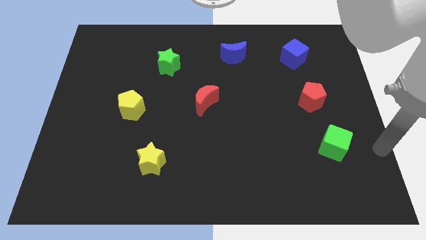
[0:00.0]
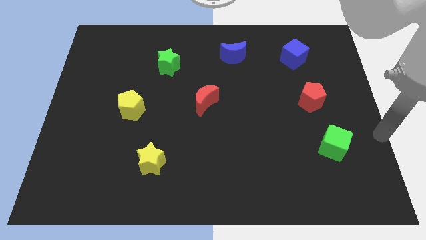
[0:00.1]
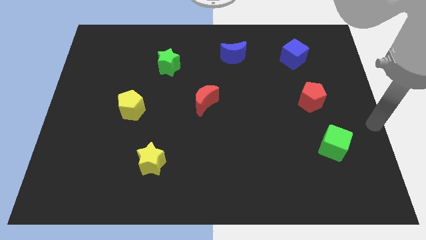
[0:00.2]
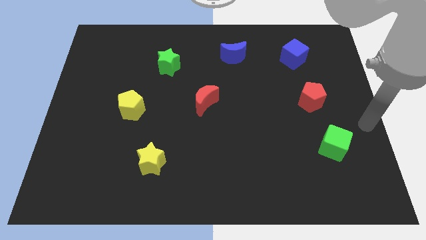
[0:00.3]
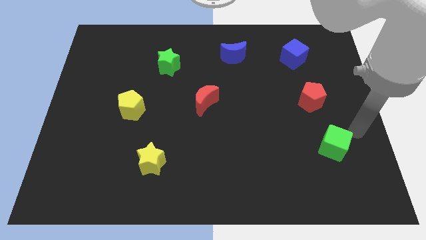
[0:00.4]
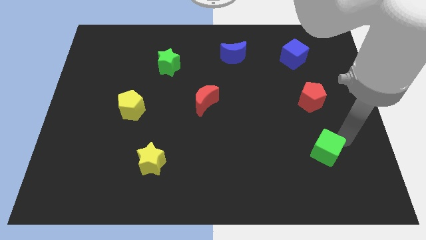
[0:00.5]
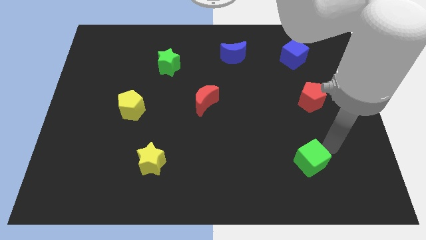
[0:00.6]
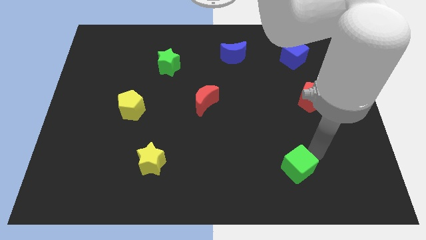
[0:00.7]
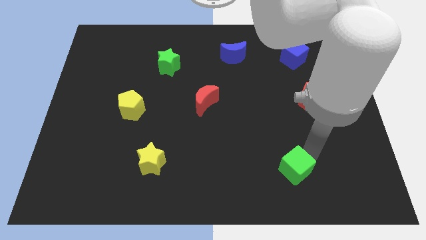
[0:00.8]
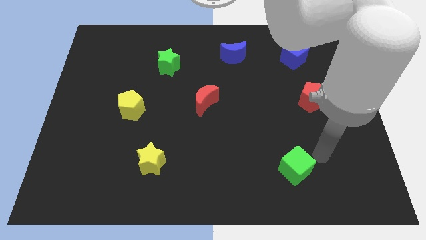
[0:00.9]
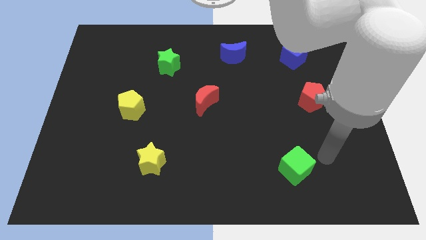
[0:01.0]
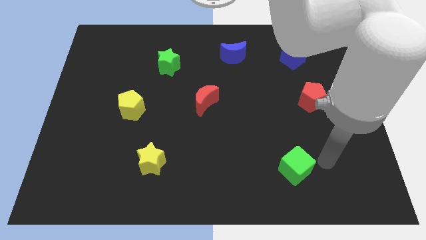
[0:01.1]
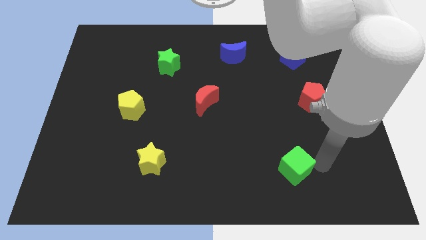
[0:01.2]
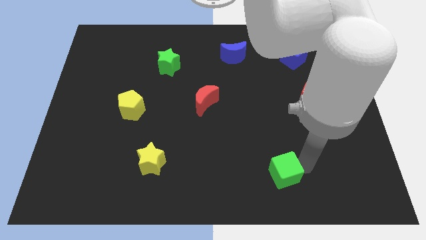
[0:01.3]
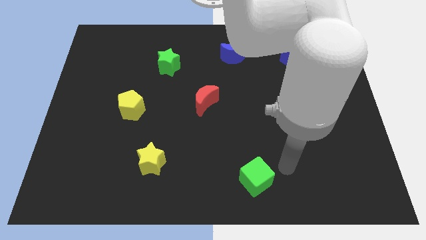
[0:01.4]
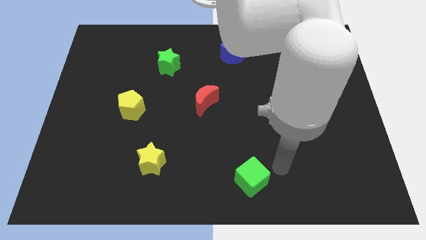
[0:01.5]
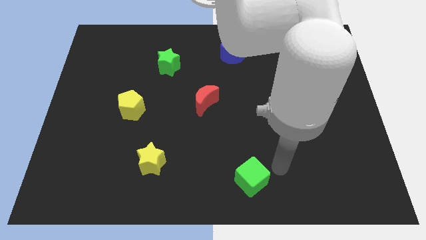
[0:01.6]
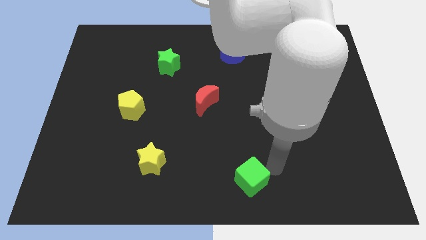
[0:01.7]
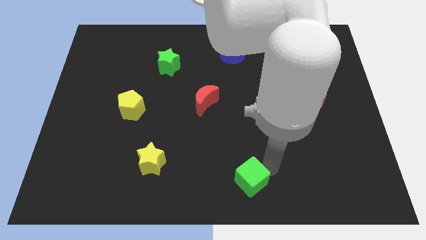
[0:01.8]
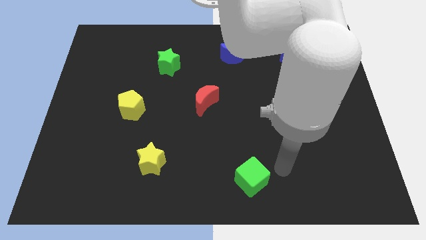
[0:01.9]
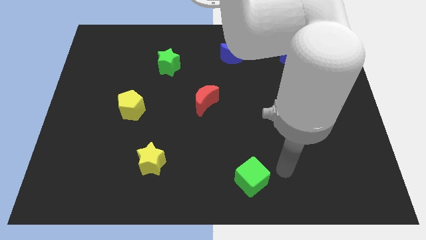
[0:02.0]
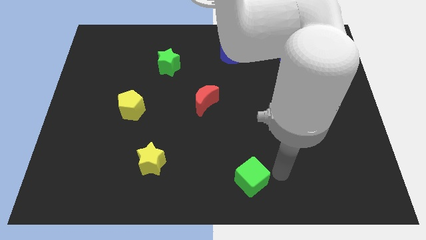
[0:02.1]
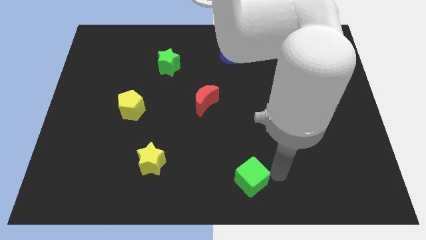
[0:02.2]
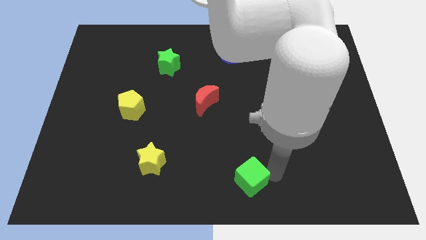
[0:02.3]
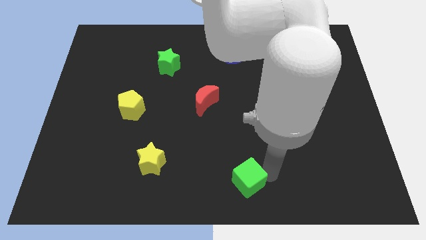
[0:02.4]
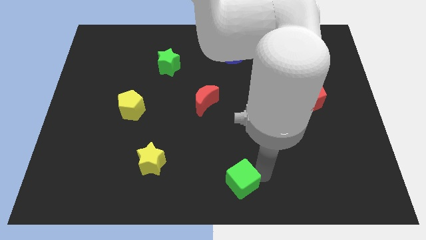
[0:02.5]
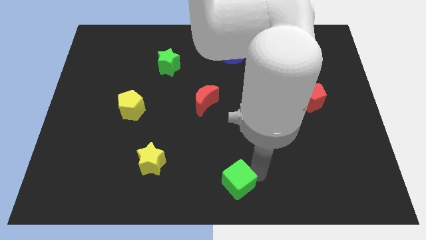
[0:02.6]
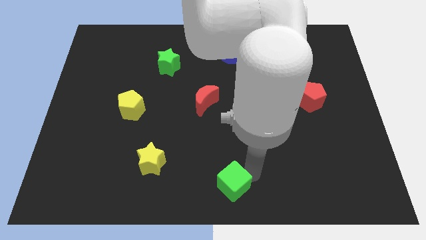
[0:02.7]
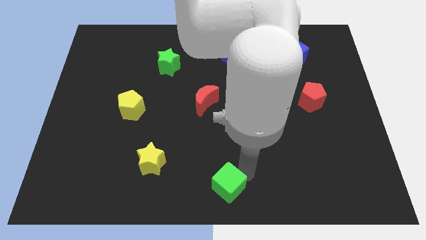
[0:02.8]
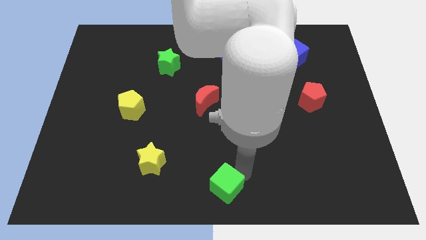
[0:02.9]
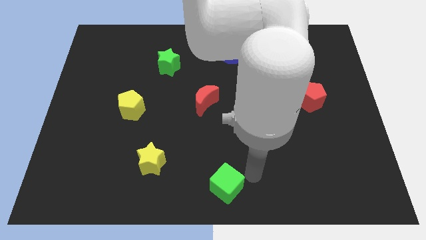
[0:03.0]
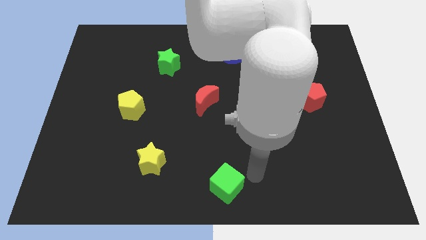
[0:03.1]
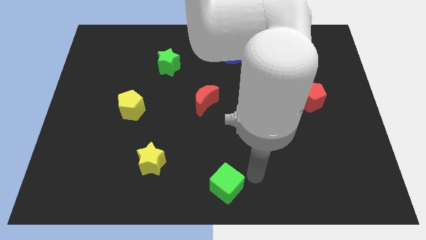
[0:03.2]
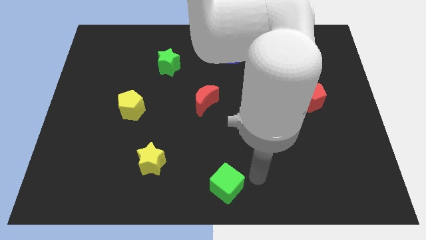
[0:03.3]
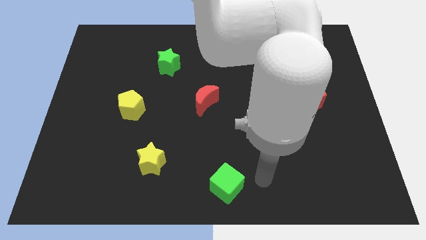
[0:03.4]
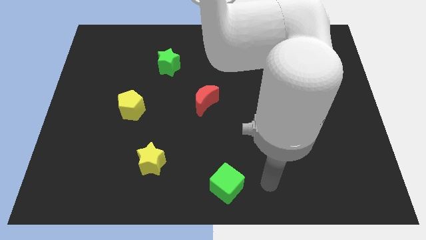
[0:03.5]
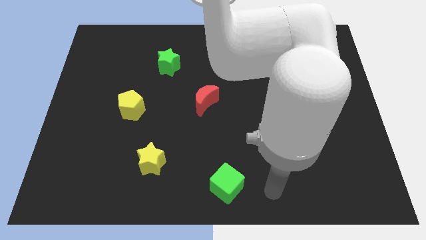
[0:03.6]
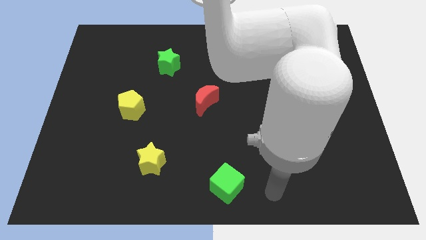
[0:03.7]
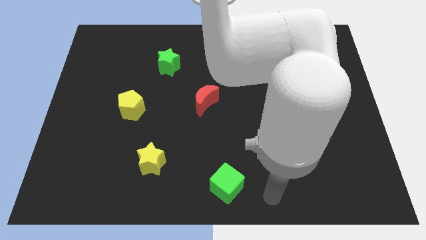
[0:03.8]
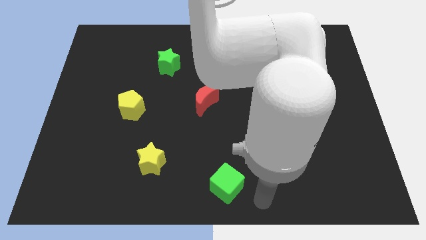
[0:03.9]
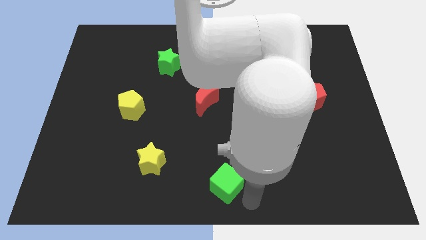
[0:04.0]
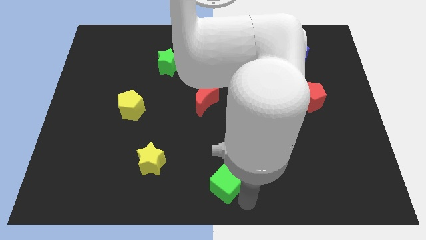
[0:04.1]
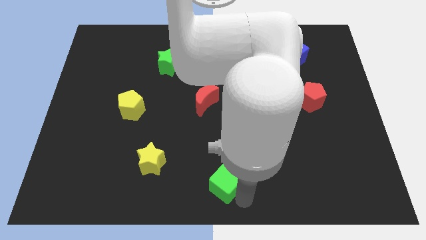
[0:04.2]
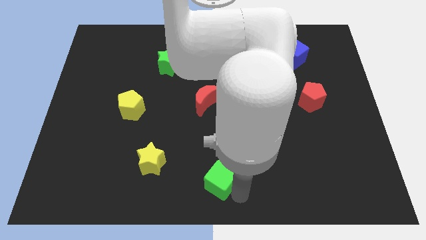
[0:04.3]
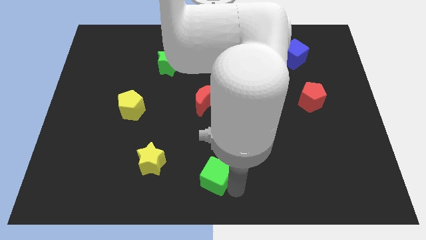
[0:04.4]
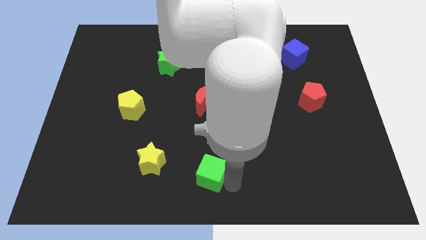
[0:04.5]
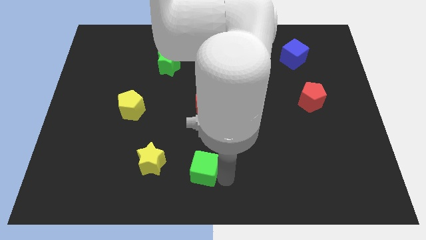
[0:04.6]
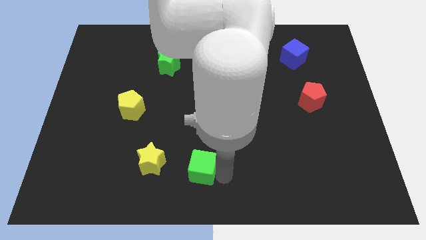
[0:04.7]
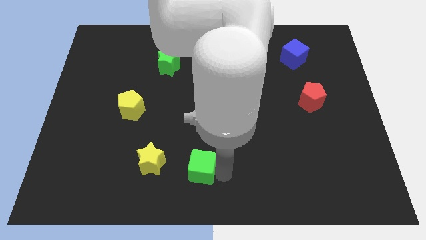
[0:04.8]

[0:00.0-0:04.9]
push the green cube towards the right side of the yellow star

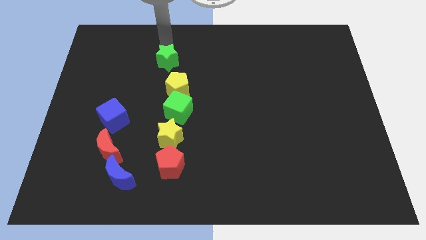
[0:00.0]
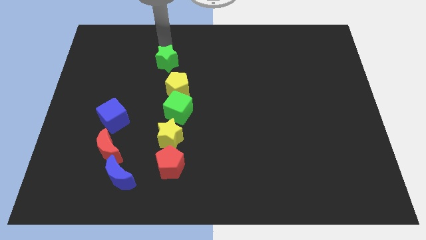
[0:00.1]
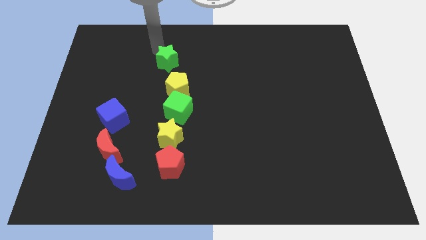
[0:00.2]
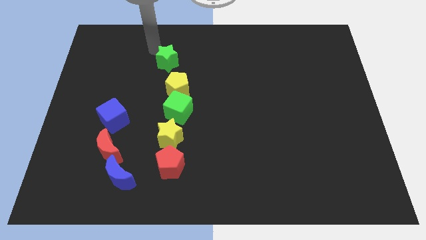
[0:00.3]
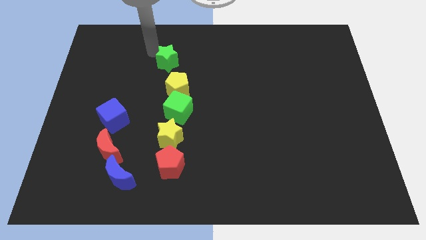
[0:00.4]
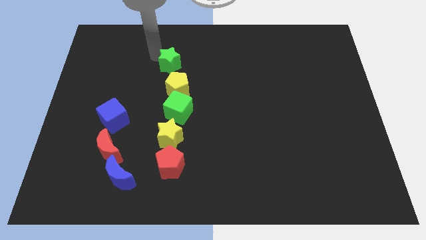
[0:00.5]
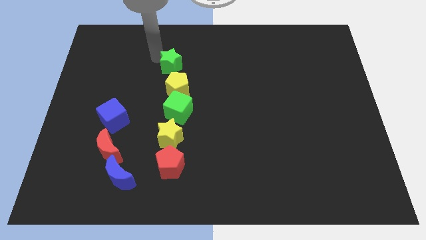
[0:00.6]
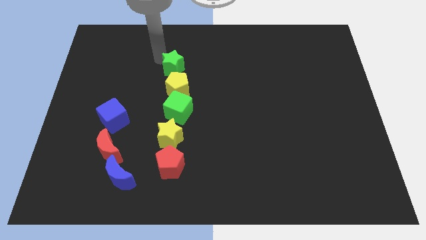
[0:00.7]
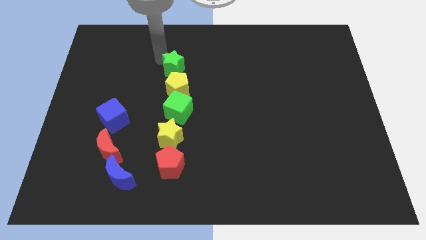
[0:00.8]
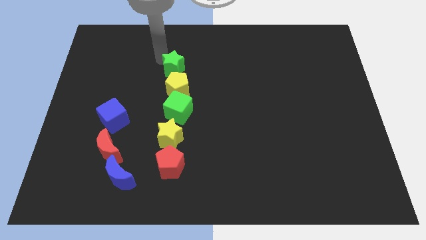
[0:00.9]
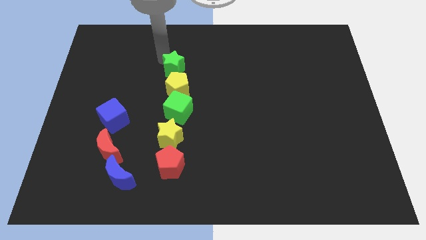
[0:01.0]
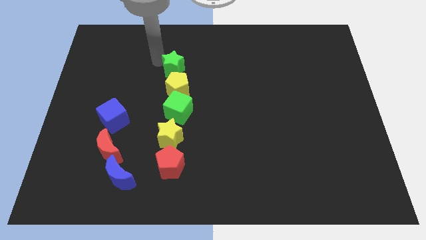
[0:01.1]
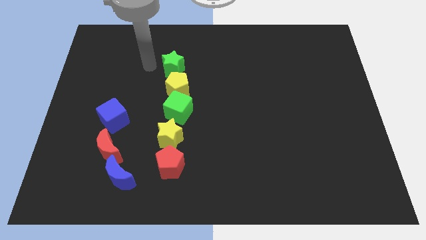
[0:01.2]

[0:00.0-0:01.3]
push the green star into the yellow pentagon

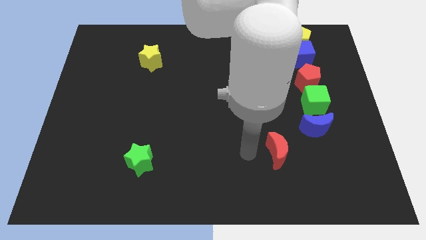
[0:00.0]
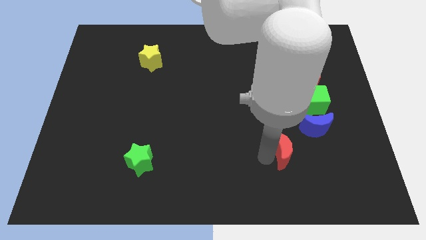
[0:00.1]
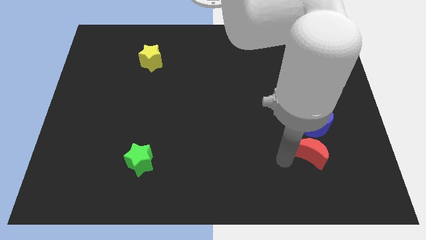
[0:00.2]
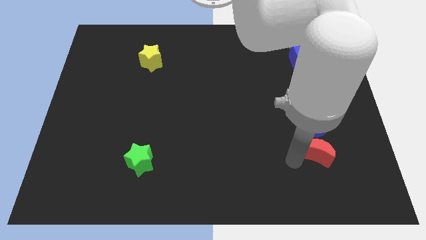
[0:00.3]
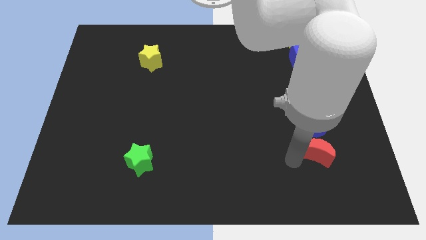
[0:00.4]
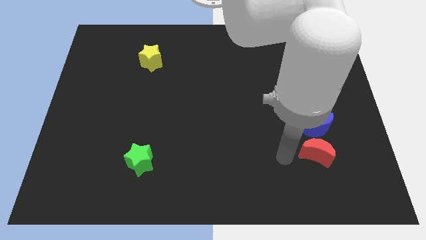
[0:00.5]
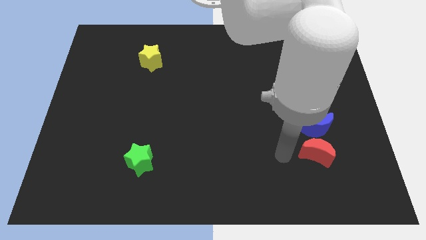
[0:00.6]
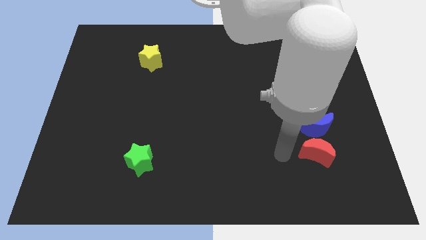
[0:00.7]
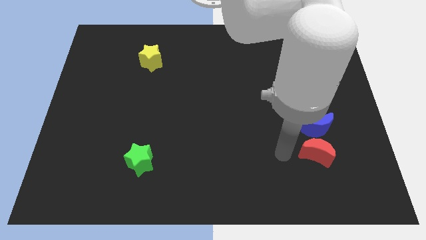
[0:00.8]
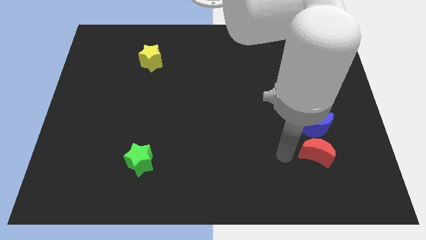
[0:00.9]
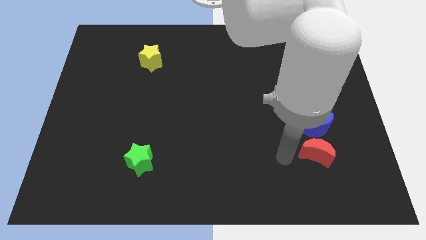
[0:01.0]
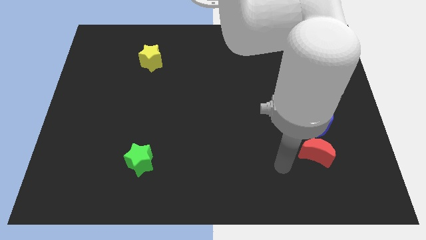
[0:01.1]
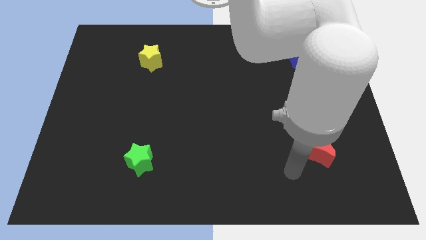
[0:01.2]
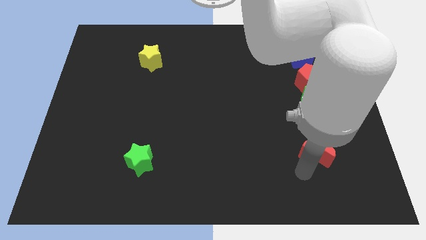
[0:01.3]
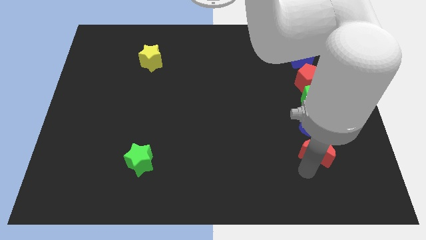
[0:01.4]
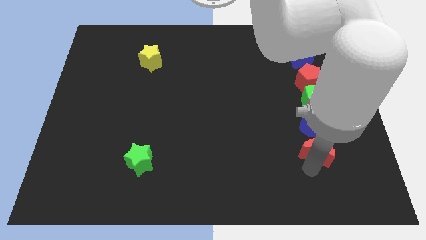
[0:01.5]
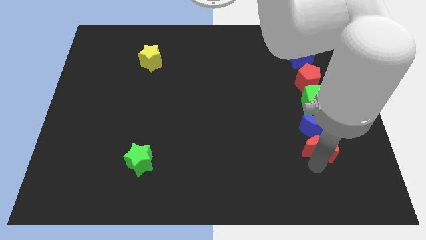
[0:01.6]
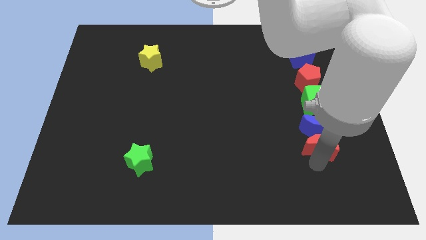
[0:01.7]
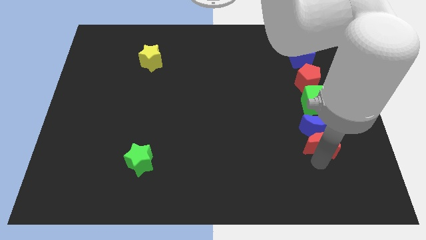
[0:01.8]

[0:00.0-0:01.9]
add the red moon to the vertical line of a group of blocks

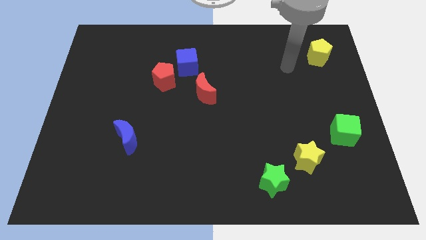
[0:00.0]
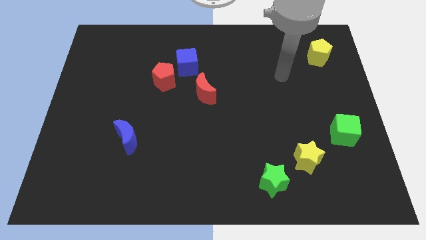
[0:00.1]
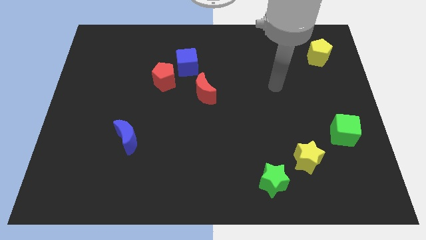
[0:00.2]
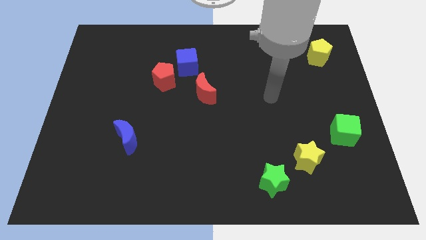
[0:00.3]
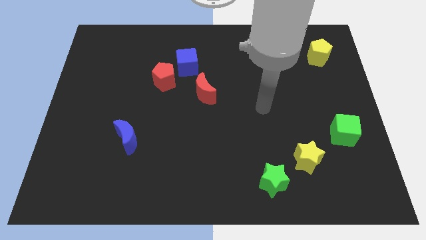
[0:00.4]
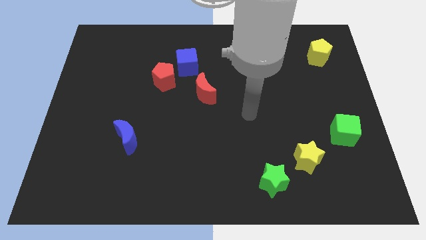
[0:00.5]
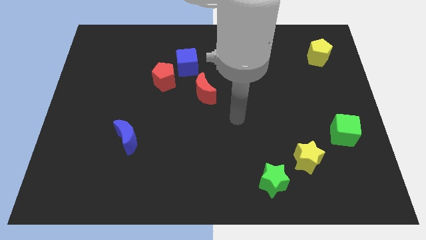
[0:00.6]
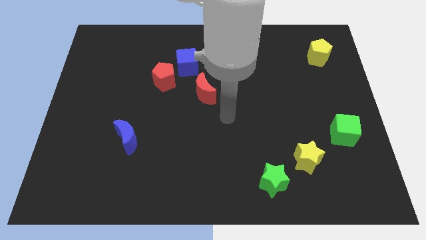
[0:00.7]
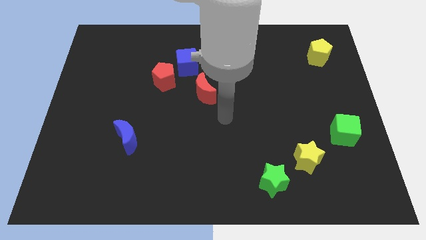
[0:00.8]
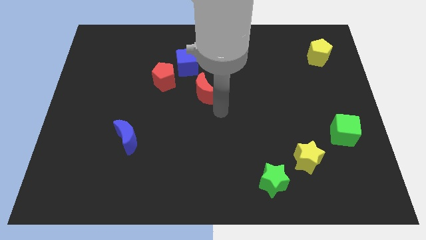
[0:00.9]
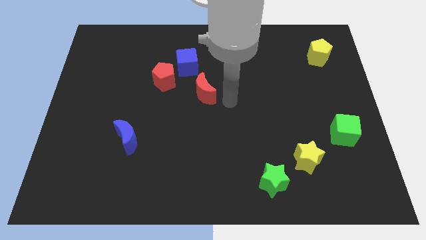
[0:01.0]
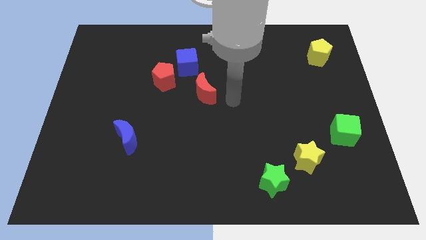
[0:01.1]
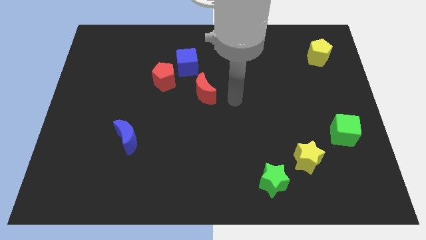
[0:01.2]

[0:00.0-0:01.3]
point your arm at the bottom right side of red moon
